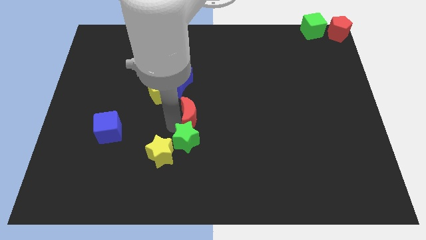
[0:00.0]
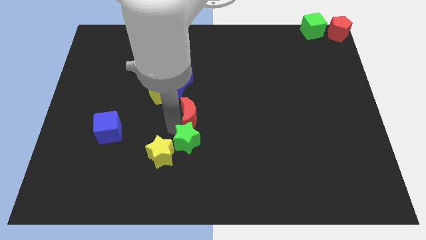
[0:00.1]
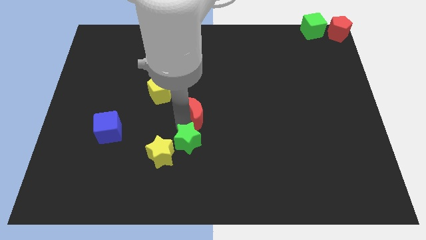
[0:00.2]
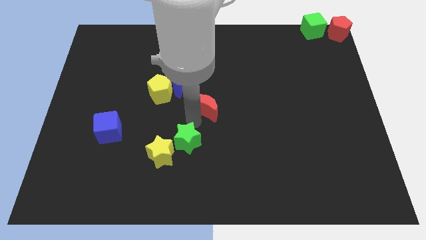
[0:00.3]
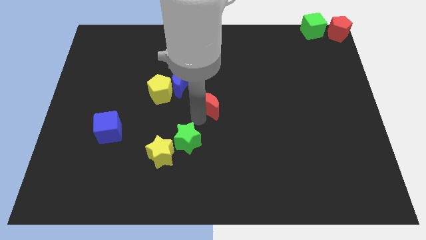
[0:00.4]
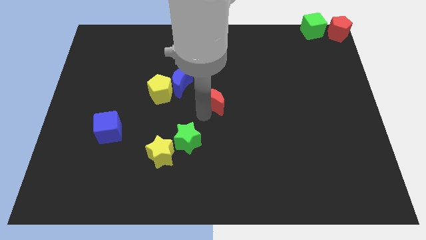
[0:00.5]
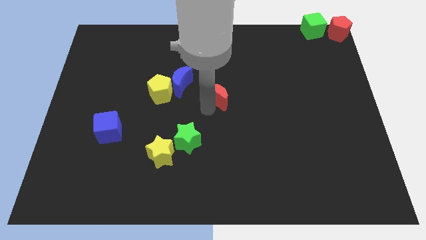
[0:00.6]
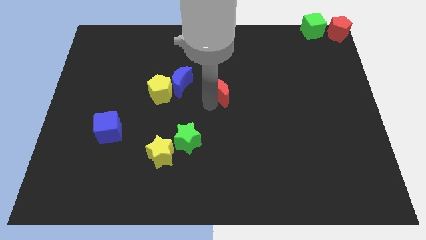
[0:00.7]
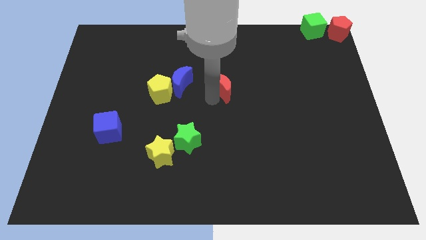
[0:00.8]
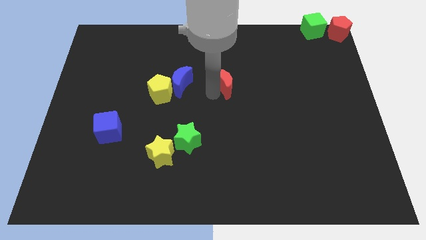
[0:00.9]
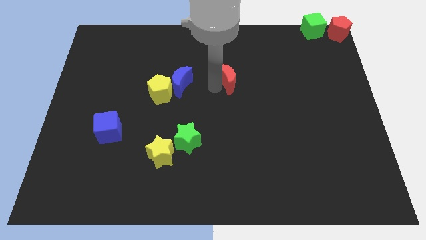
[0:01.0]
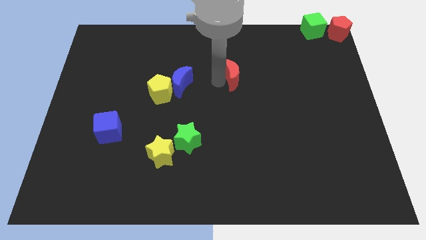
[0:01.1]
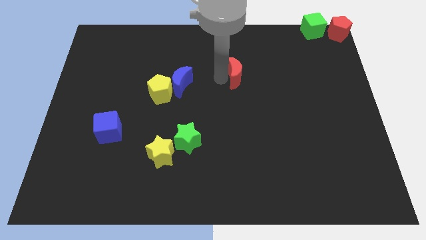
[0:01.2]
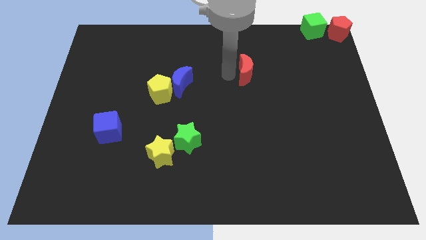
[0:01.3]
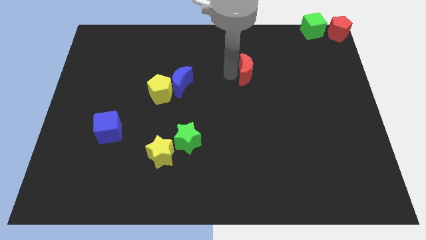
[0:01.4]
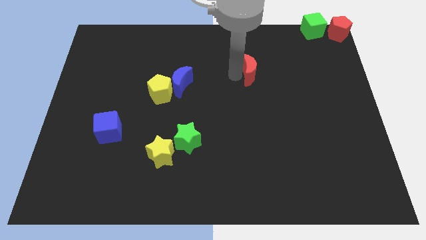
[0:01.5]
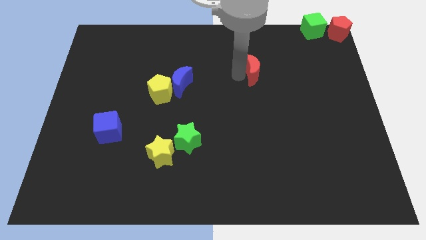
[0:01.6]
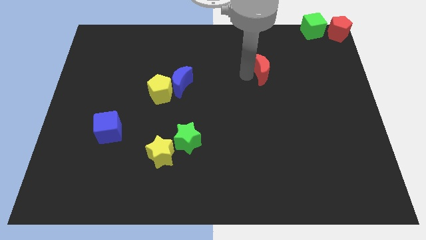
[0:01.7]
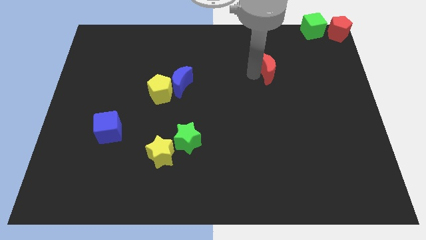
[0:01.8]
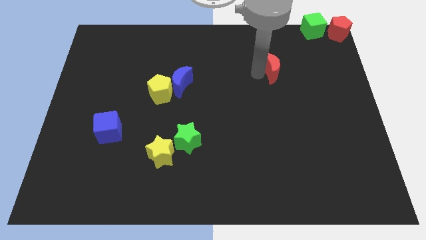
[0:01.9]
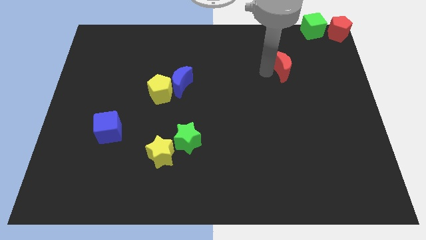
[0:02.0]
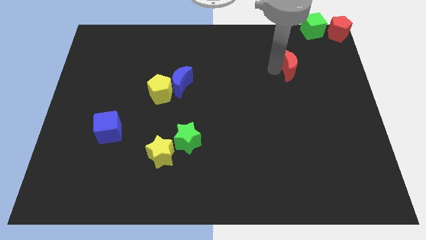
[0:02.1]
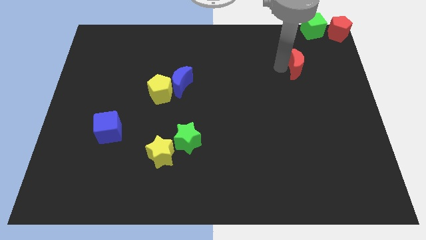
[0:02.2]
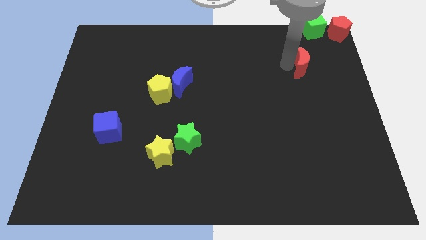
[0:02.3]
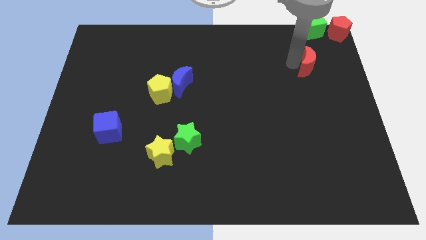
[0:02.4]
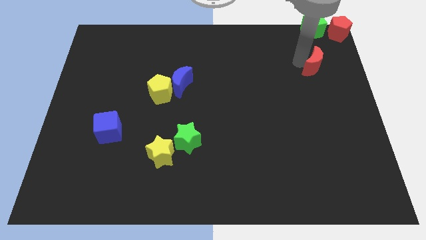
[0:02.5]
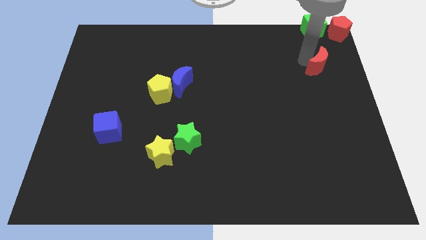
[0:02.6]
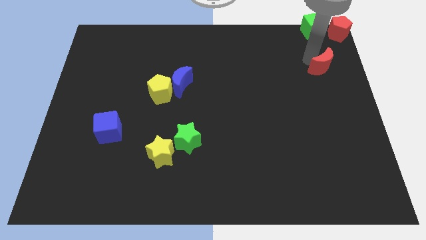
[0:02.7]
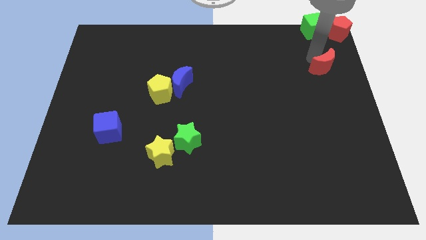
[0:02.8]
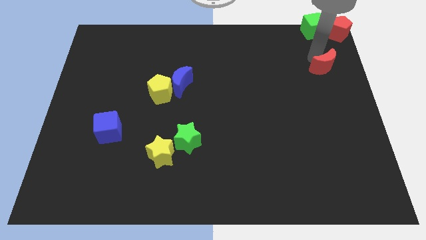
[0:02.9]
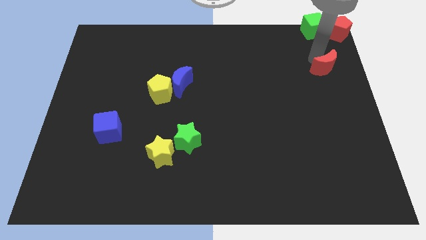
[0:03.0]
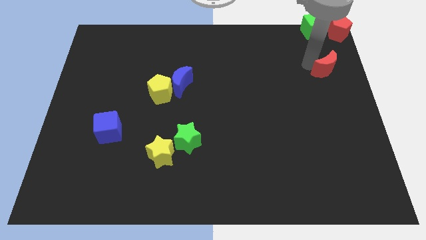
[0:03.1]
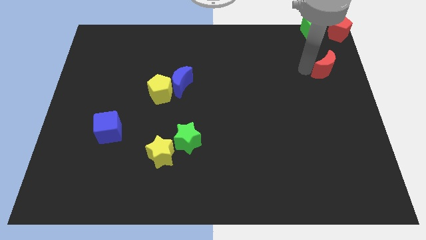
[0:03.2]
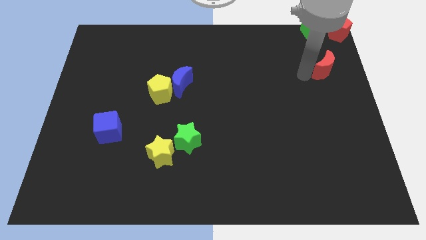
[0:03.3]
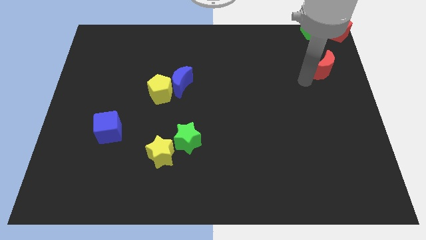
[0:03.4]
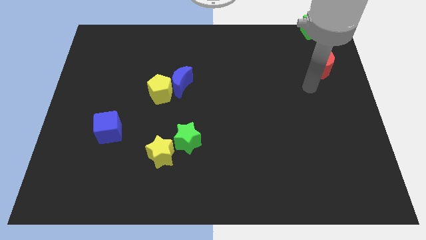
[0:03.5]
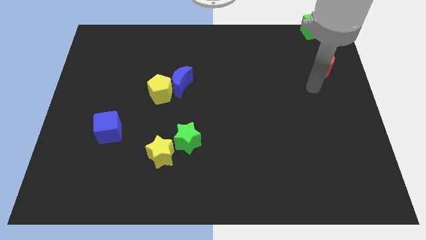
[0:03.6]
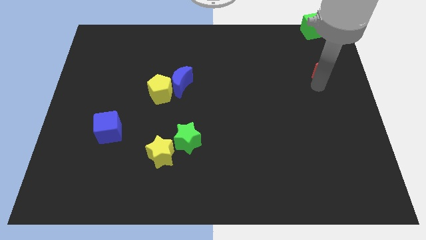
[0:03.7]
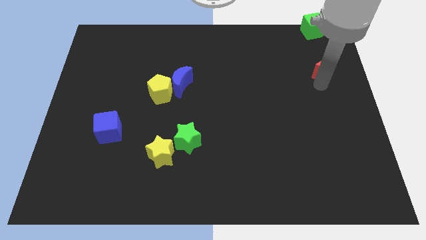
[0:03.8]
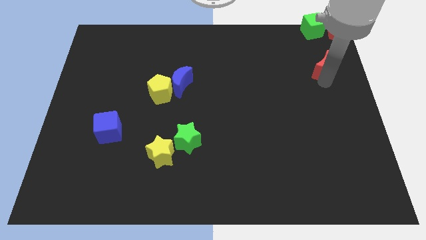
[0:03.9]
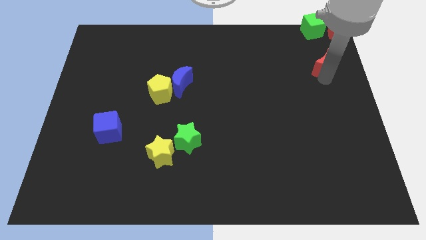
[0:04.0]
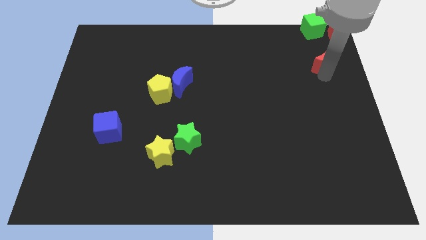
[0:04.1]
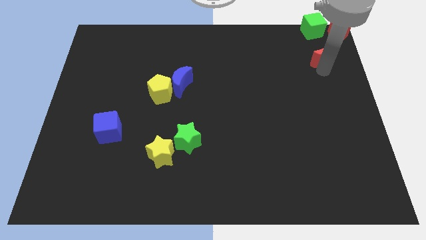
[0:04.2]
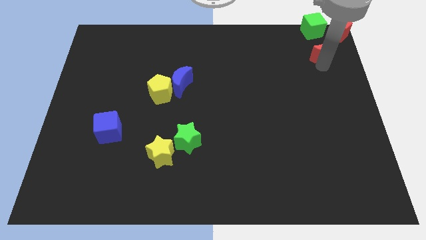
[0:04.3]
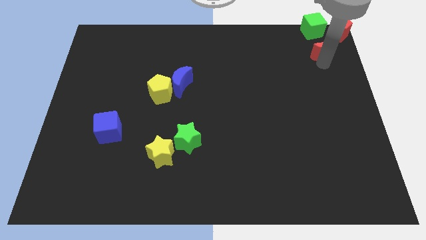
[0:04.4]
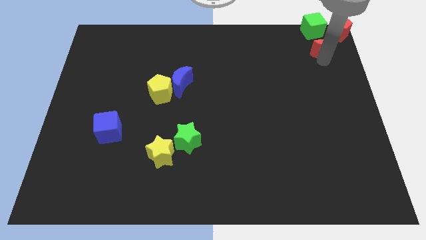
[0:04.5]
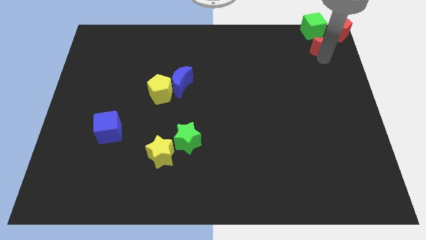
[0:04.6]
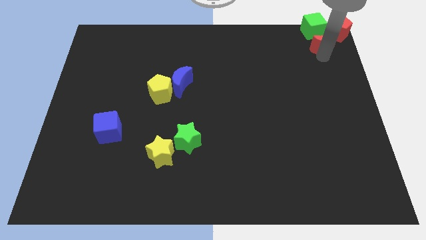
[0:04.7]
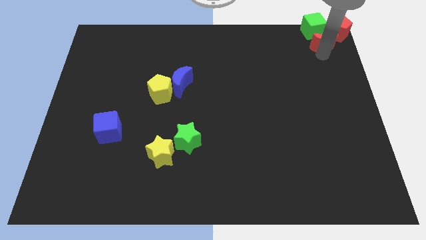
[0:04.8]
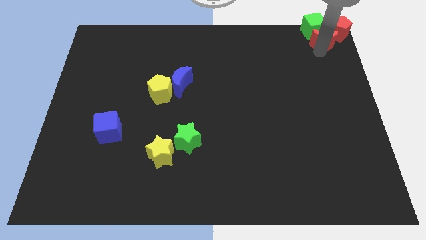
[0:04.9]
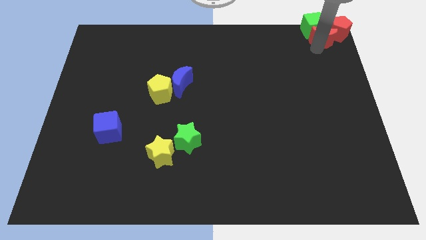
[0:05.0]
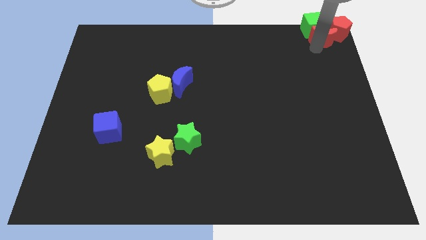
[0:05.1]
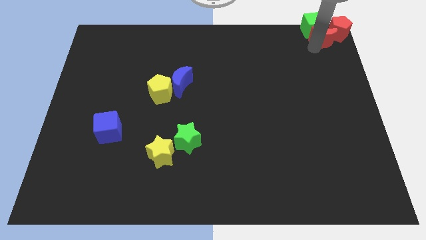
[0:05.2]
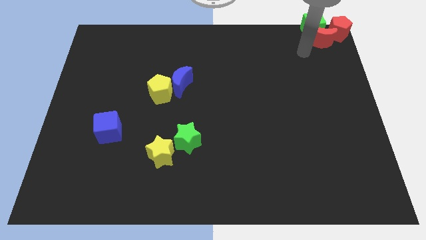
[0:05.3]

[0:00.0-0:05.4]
move the red crescent into the green cube

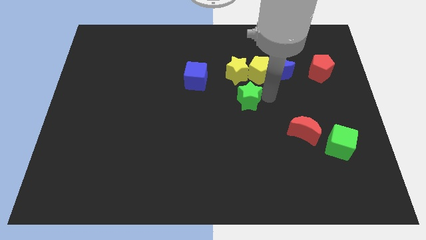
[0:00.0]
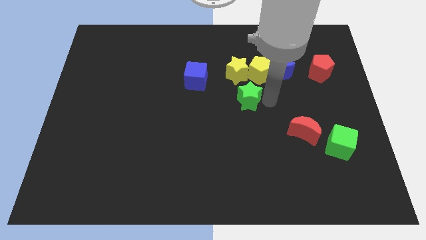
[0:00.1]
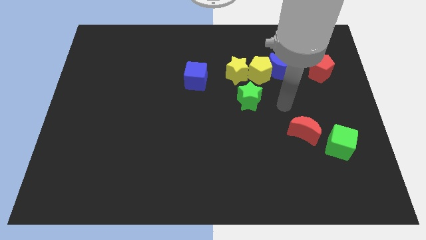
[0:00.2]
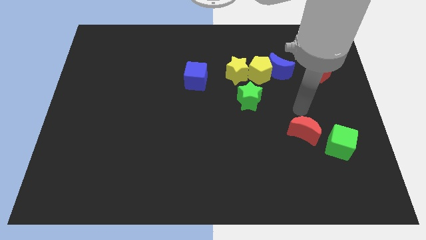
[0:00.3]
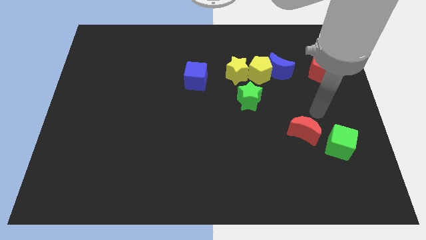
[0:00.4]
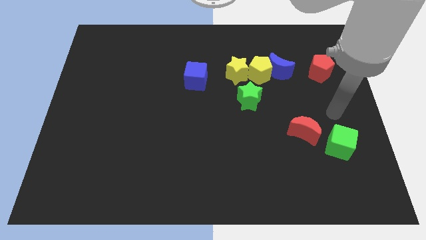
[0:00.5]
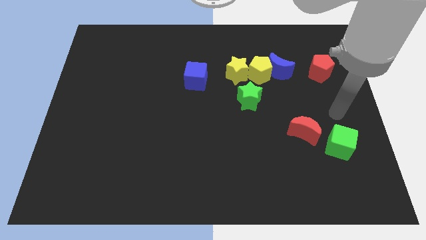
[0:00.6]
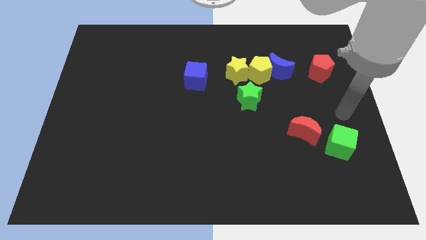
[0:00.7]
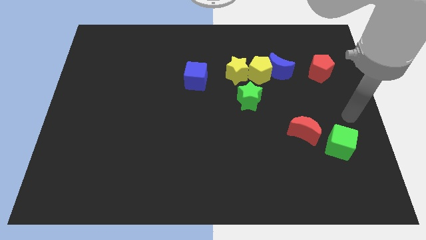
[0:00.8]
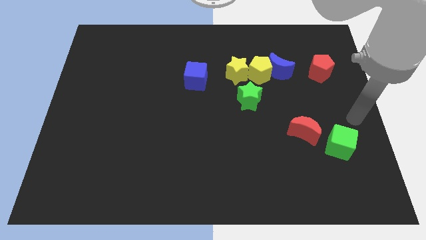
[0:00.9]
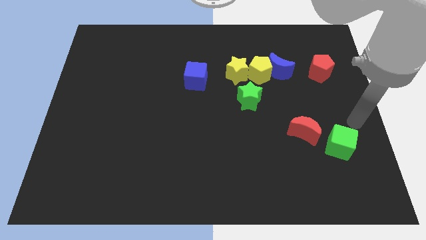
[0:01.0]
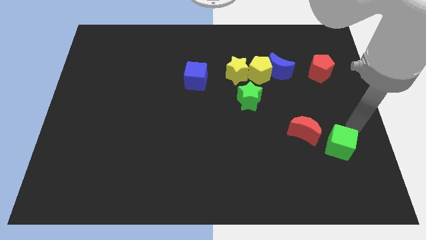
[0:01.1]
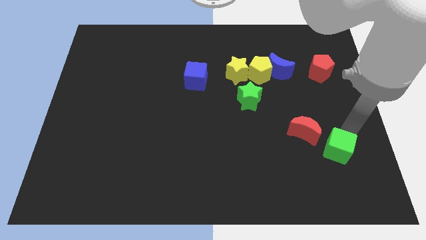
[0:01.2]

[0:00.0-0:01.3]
move your hand towards the green cube

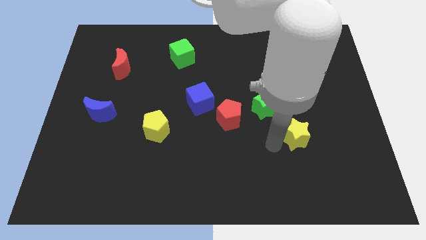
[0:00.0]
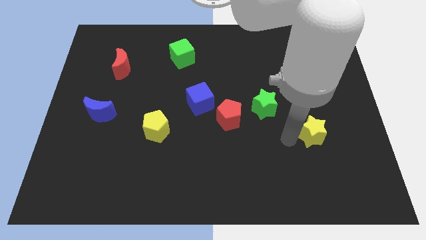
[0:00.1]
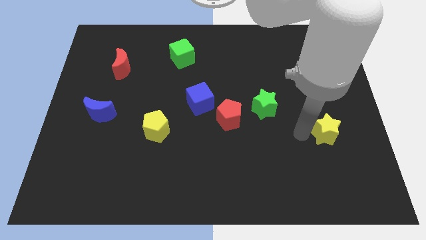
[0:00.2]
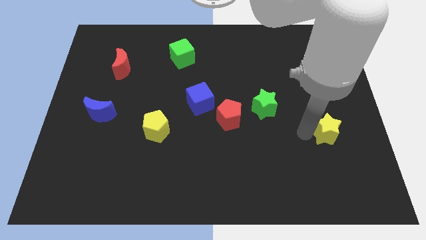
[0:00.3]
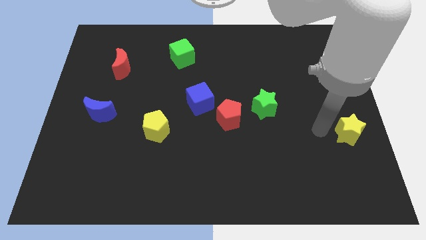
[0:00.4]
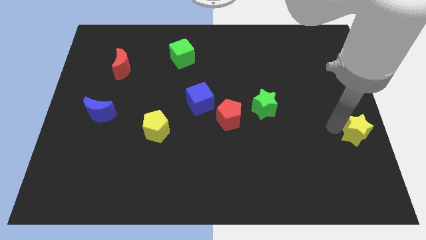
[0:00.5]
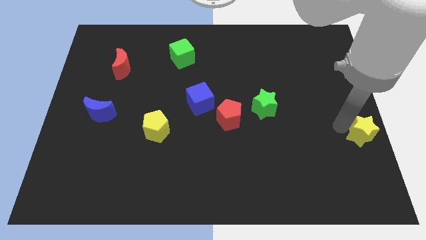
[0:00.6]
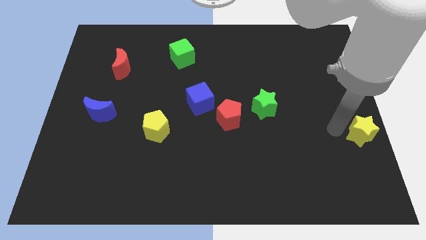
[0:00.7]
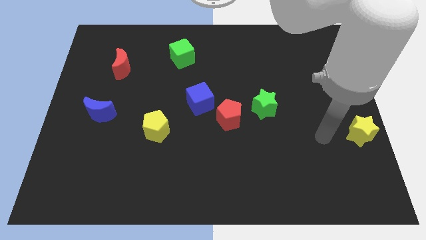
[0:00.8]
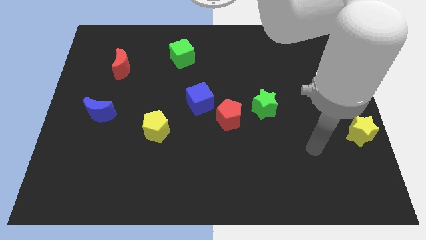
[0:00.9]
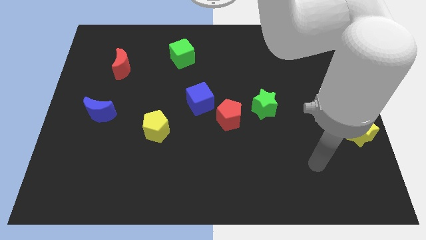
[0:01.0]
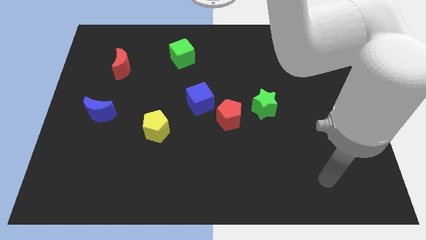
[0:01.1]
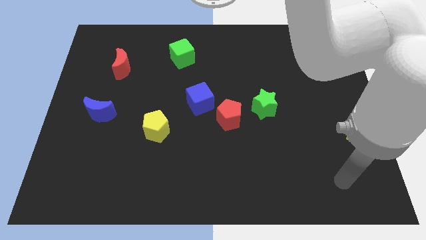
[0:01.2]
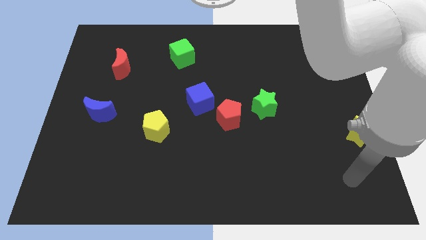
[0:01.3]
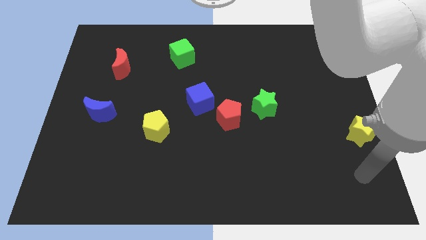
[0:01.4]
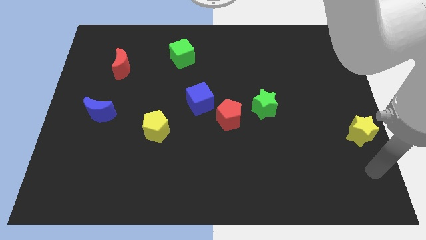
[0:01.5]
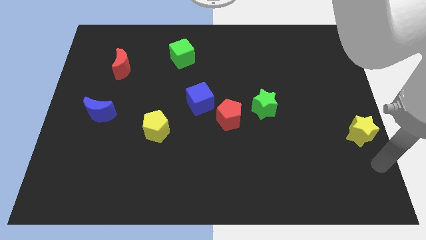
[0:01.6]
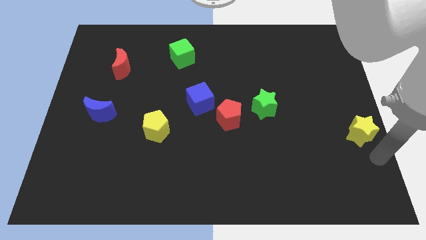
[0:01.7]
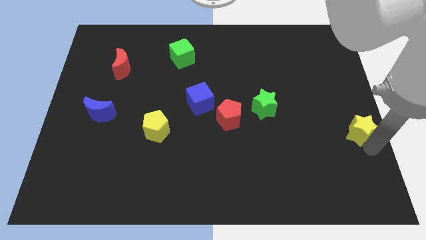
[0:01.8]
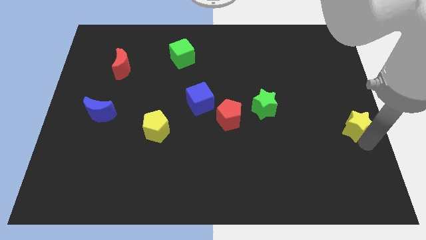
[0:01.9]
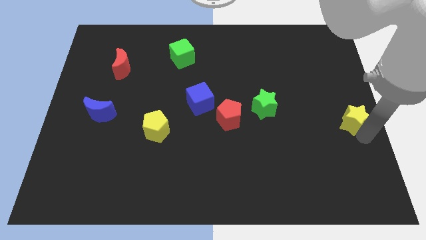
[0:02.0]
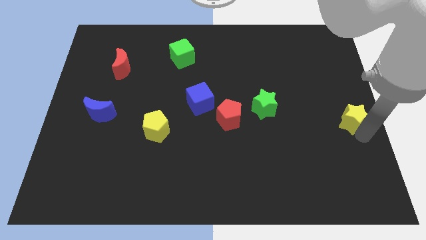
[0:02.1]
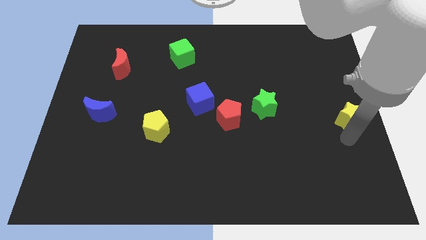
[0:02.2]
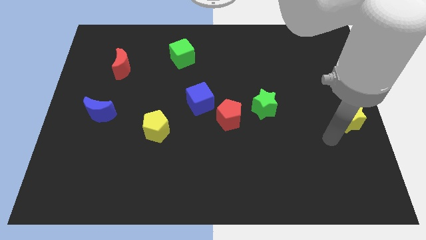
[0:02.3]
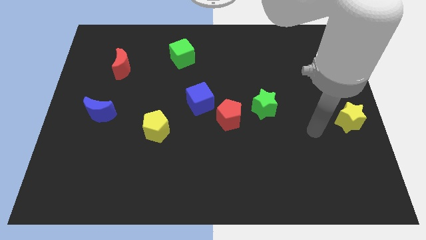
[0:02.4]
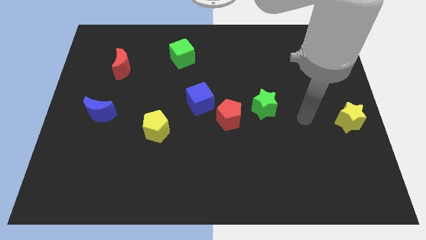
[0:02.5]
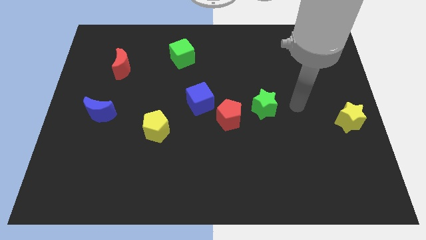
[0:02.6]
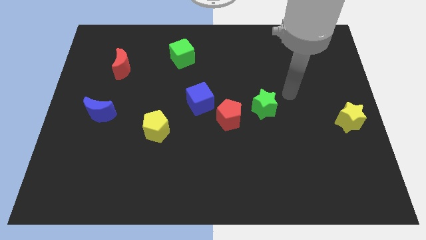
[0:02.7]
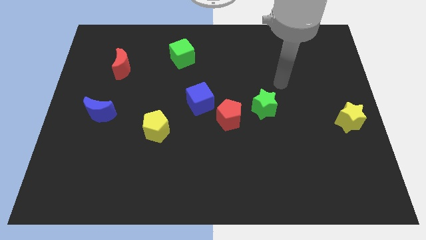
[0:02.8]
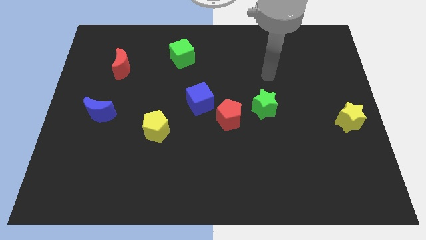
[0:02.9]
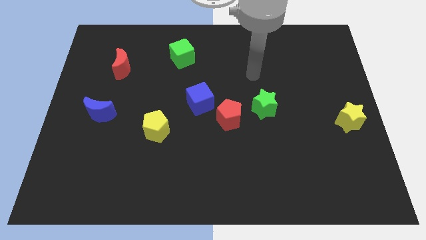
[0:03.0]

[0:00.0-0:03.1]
place the yellow star horizontal to the red pentagon
